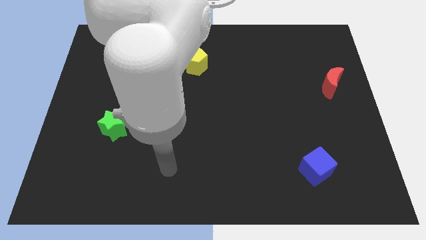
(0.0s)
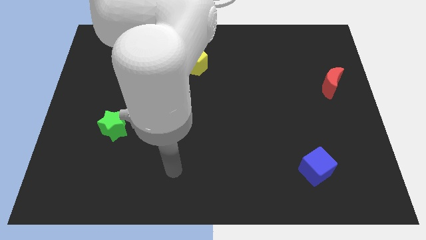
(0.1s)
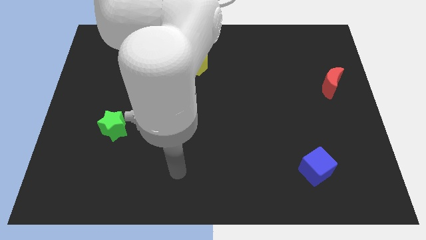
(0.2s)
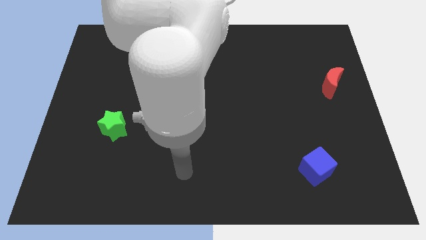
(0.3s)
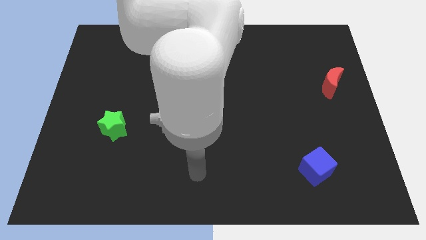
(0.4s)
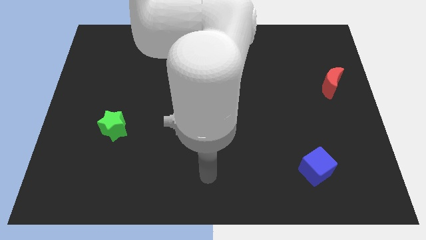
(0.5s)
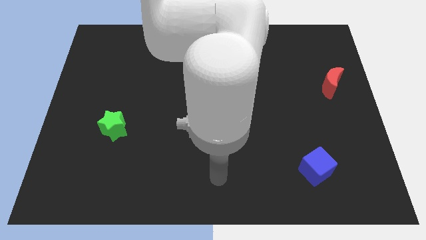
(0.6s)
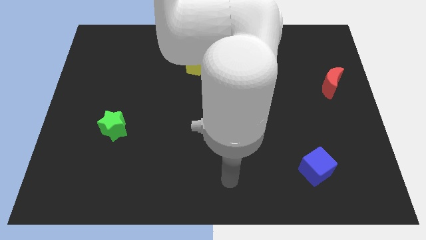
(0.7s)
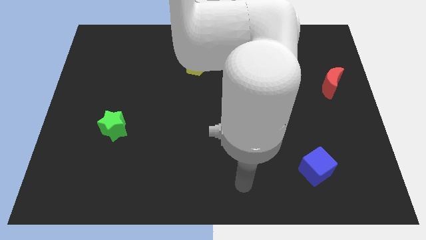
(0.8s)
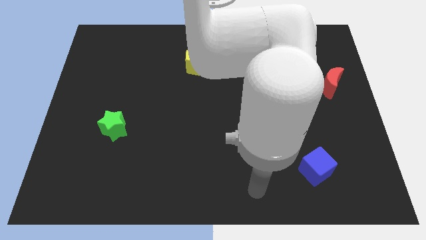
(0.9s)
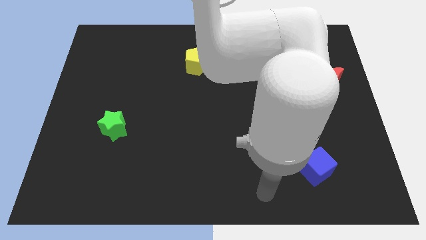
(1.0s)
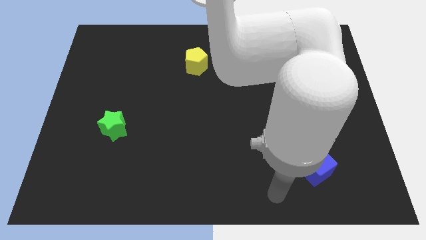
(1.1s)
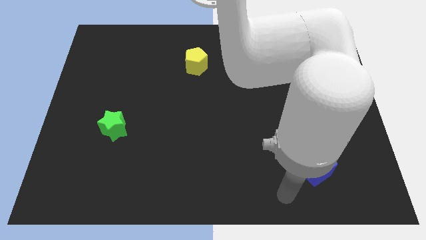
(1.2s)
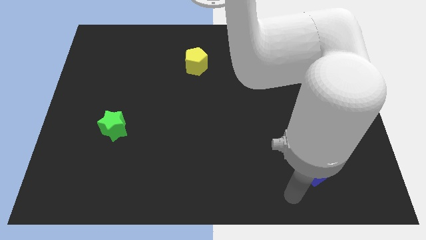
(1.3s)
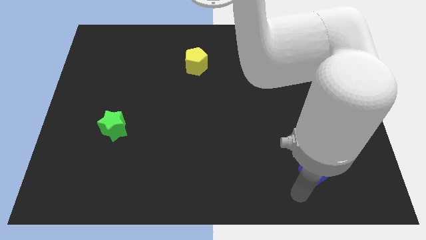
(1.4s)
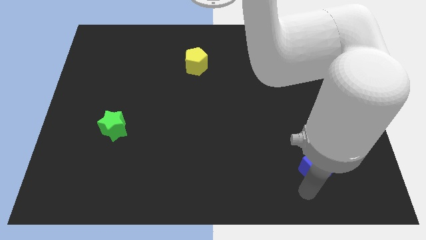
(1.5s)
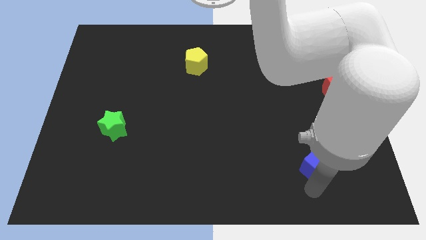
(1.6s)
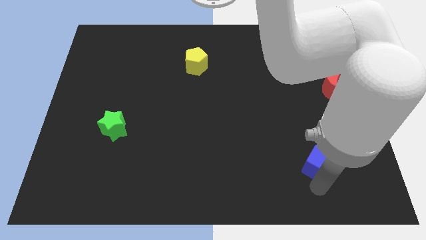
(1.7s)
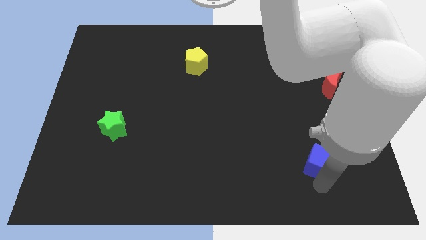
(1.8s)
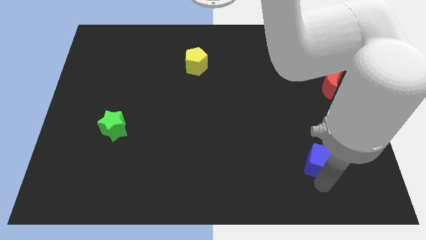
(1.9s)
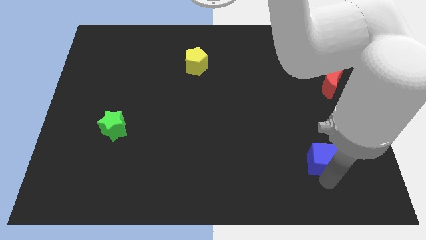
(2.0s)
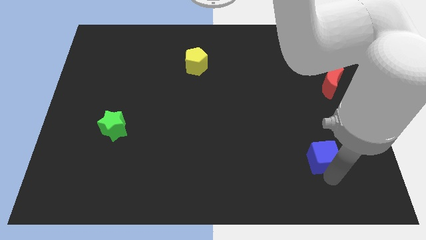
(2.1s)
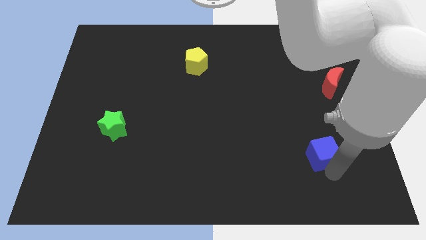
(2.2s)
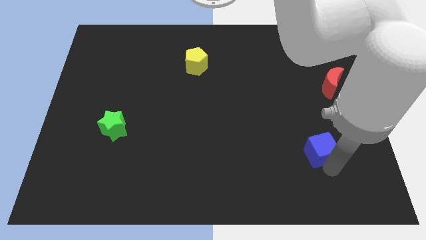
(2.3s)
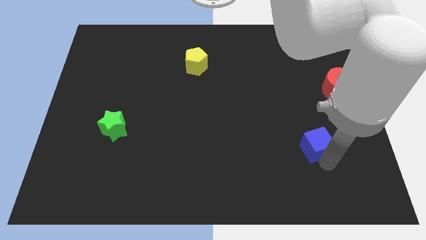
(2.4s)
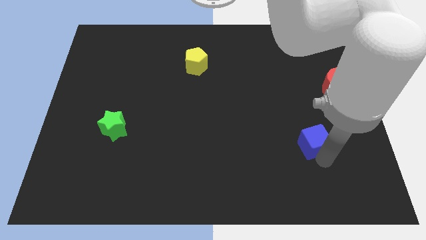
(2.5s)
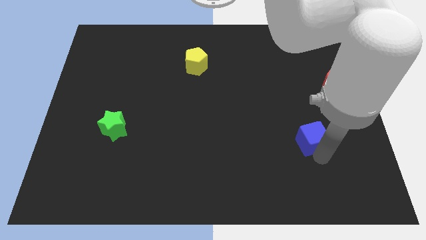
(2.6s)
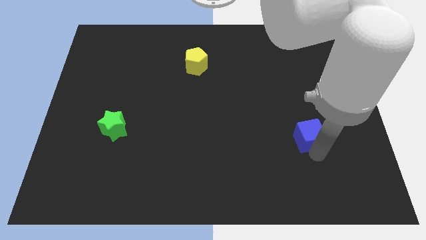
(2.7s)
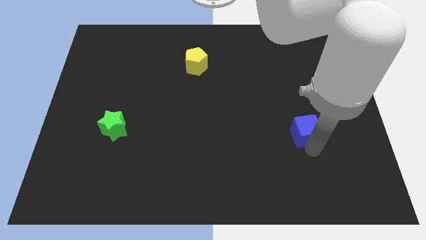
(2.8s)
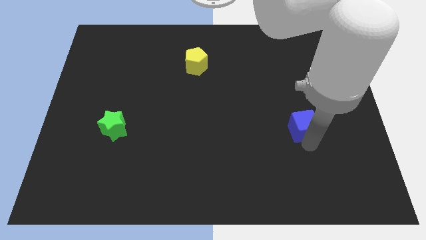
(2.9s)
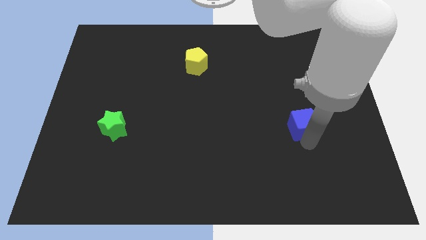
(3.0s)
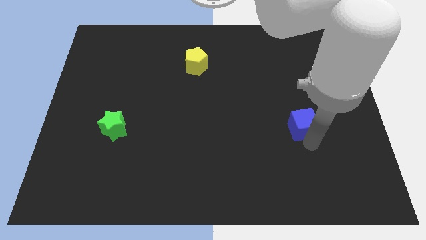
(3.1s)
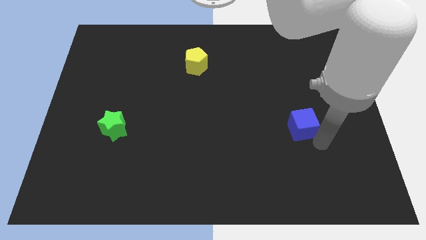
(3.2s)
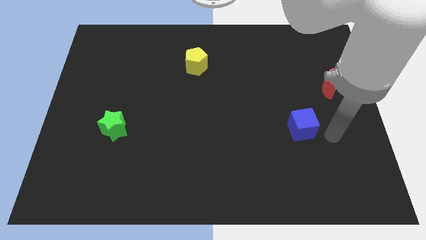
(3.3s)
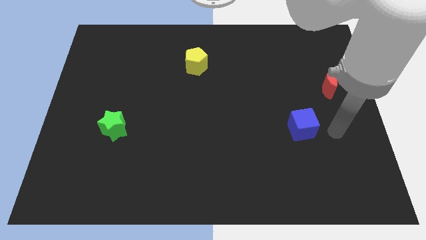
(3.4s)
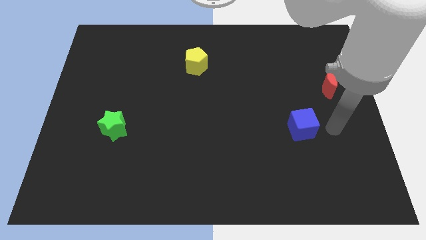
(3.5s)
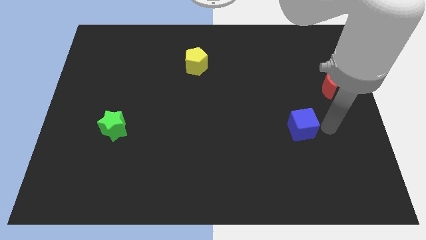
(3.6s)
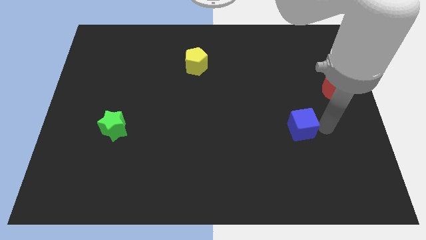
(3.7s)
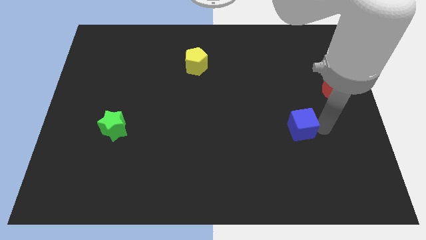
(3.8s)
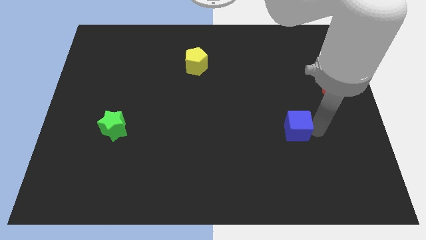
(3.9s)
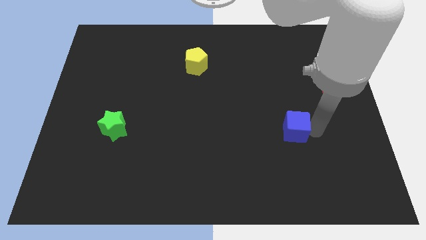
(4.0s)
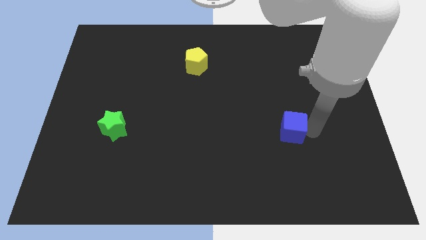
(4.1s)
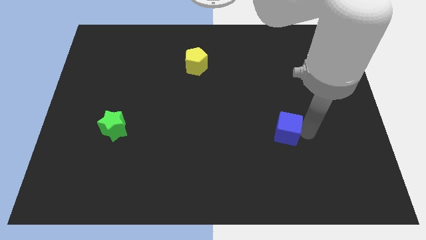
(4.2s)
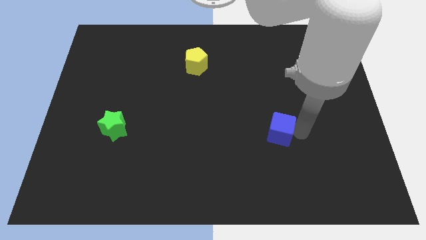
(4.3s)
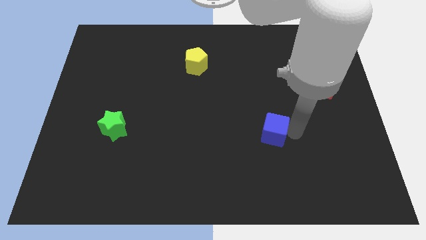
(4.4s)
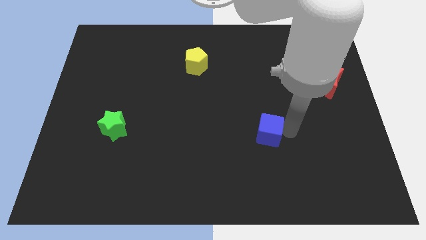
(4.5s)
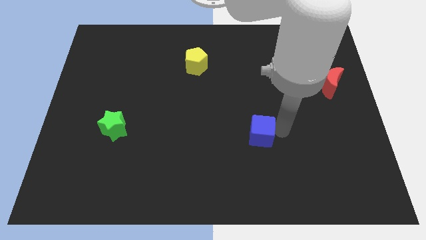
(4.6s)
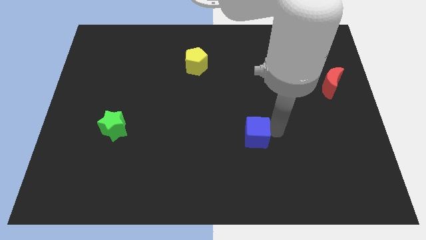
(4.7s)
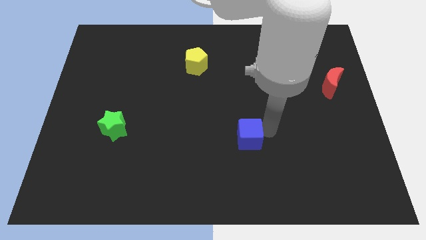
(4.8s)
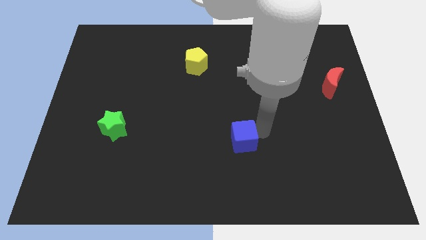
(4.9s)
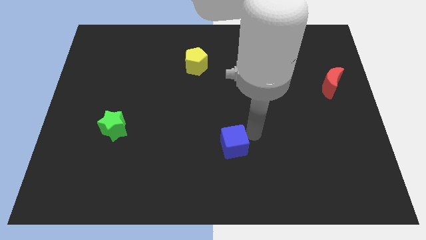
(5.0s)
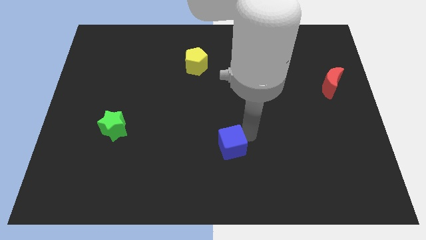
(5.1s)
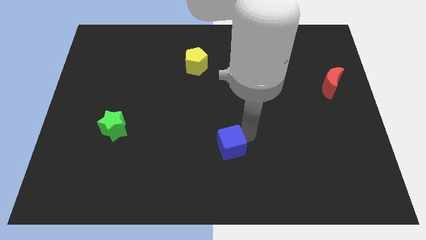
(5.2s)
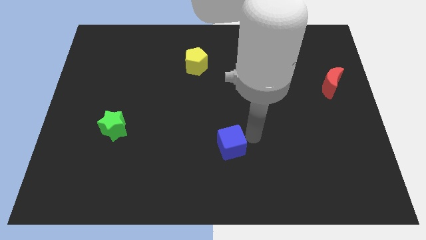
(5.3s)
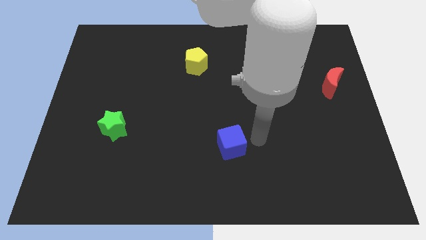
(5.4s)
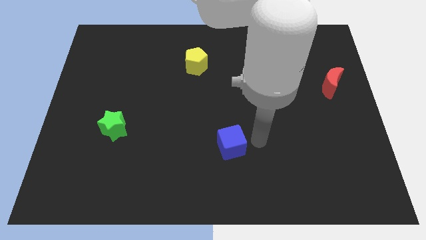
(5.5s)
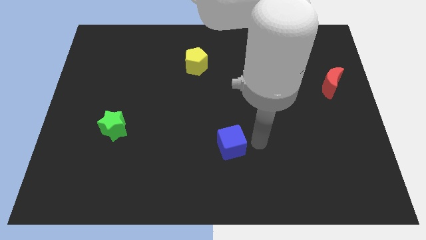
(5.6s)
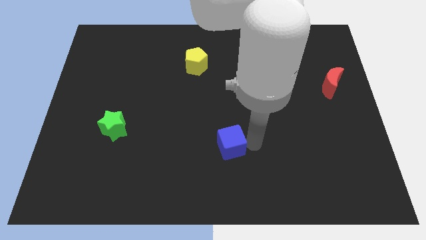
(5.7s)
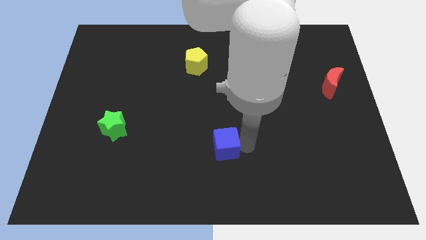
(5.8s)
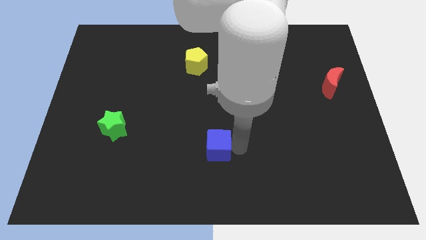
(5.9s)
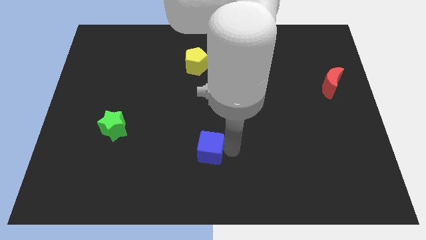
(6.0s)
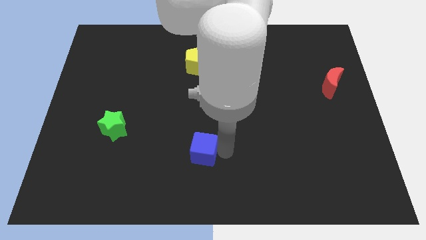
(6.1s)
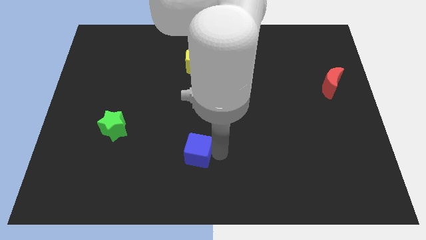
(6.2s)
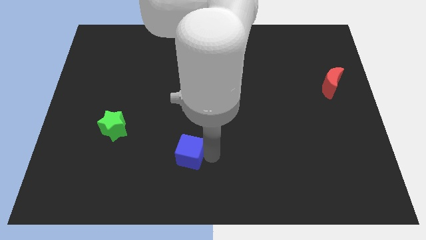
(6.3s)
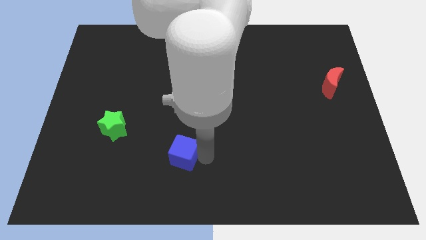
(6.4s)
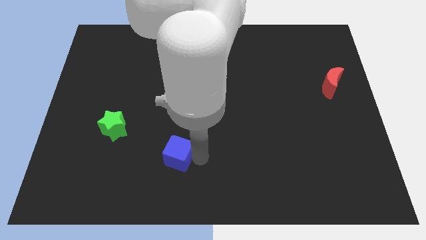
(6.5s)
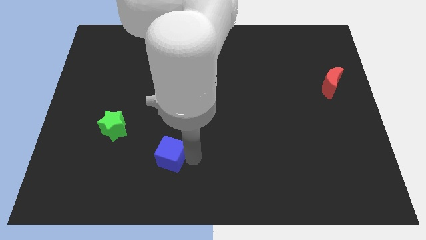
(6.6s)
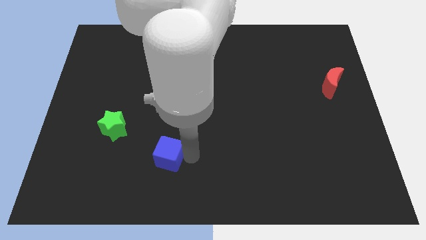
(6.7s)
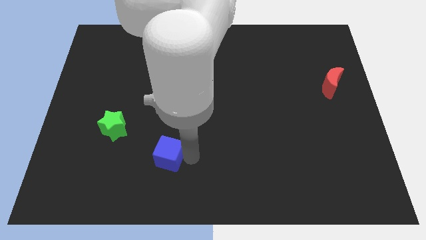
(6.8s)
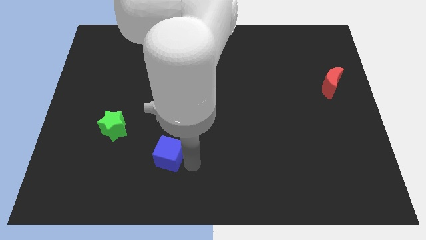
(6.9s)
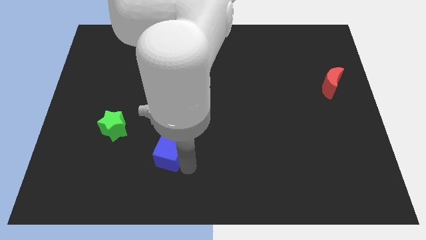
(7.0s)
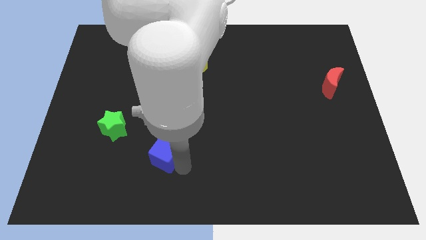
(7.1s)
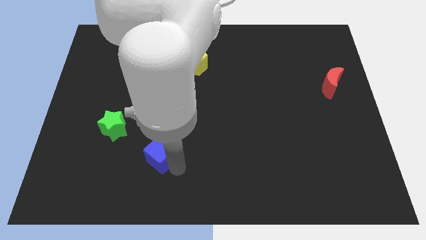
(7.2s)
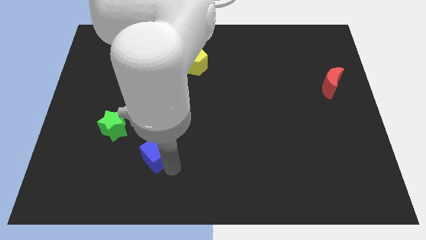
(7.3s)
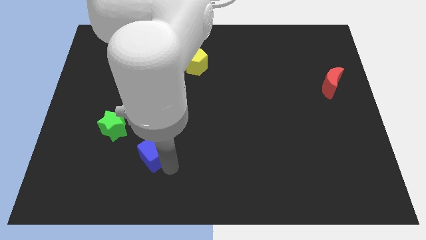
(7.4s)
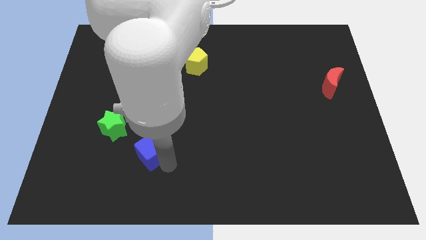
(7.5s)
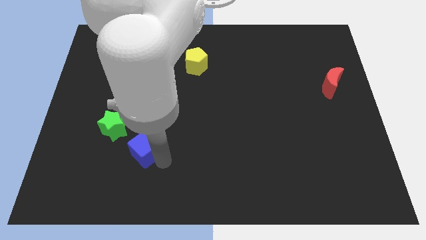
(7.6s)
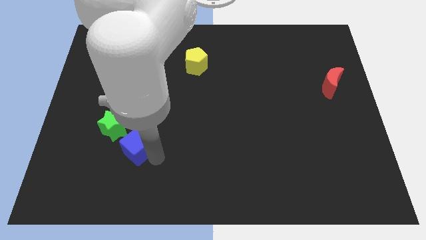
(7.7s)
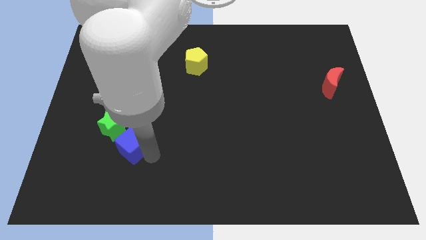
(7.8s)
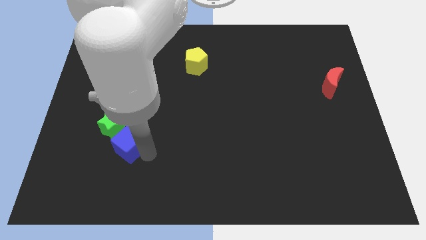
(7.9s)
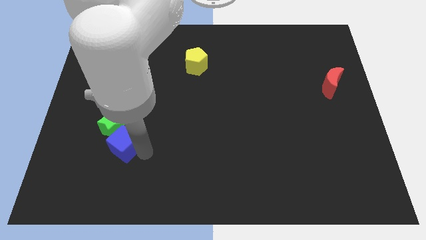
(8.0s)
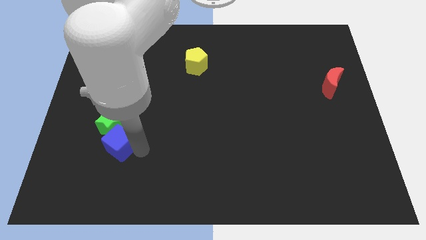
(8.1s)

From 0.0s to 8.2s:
move the blue cube next to the star
